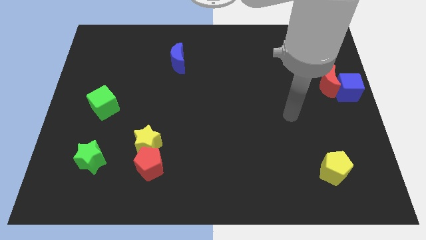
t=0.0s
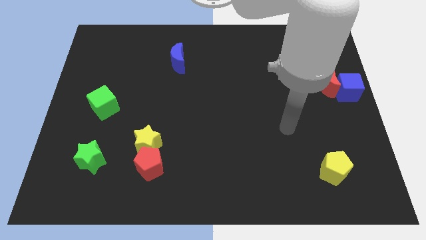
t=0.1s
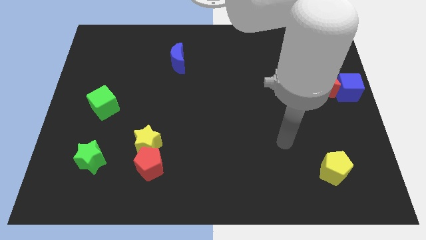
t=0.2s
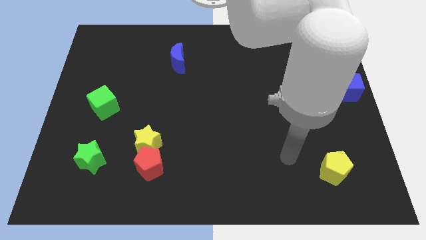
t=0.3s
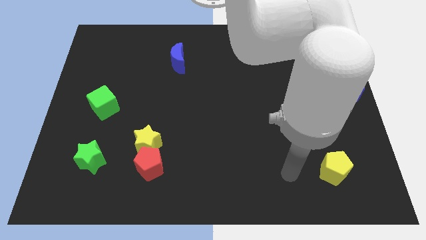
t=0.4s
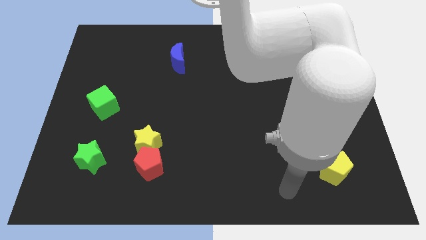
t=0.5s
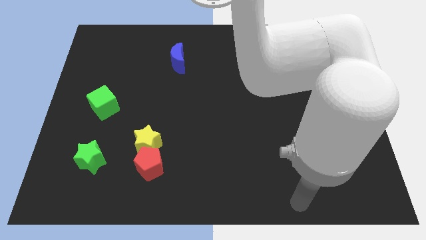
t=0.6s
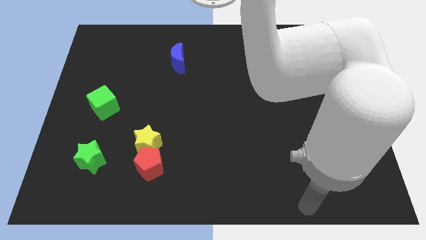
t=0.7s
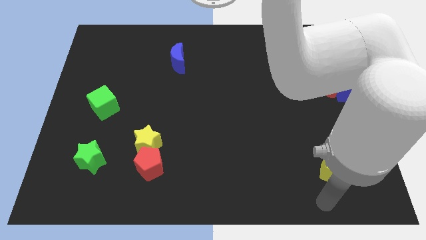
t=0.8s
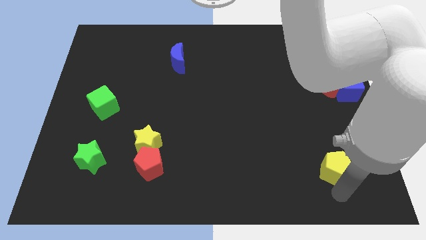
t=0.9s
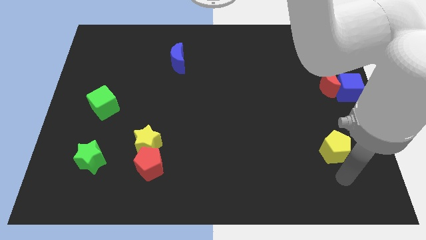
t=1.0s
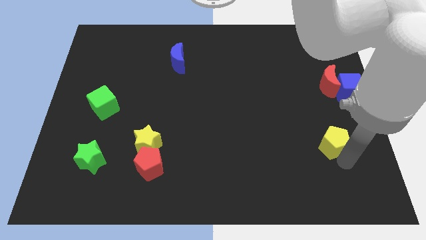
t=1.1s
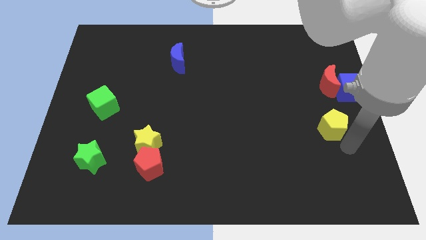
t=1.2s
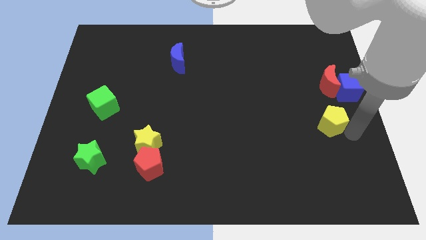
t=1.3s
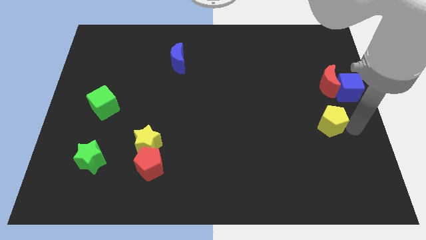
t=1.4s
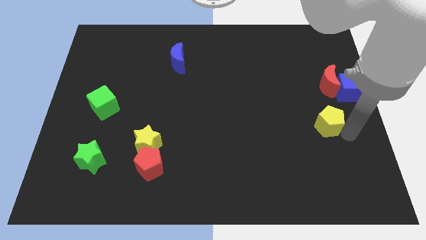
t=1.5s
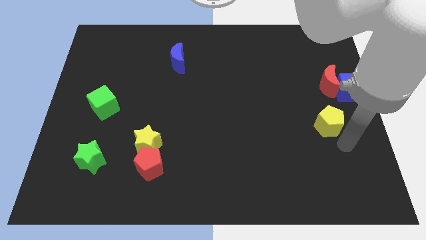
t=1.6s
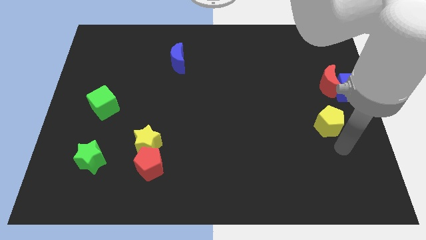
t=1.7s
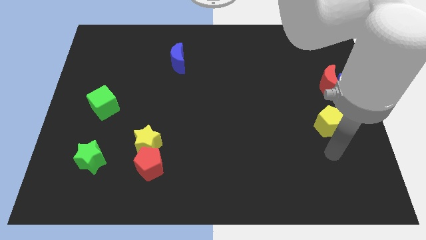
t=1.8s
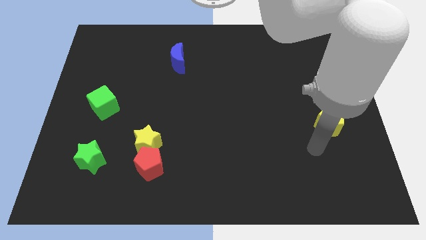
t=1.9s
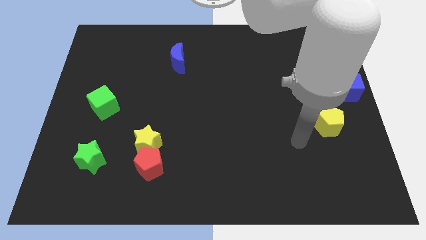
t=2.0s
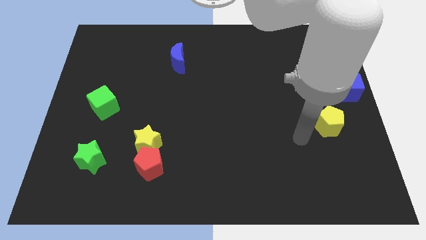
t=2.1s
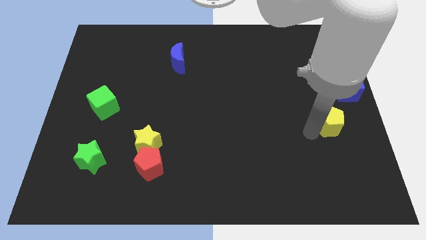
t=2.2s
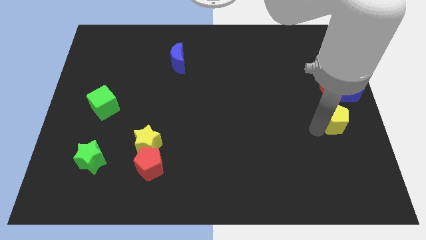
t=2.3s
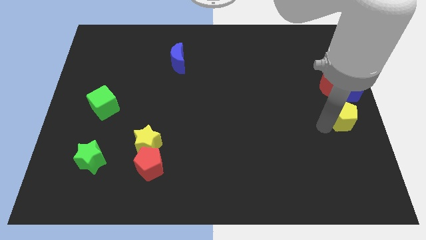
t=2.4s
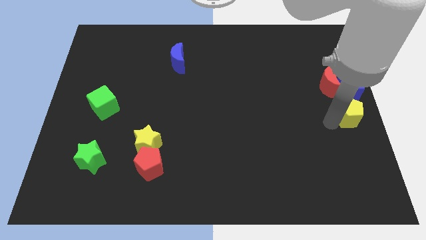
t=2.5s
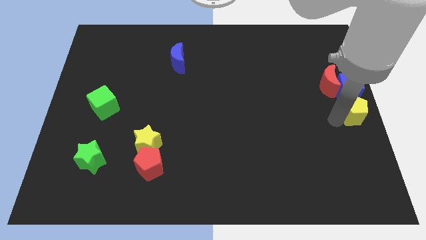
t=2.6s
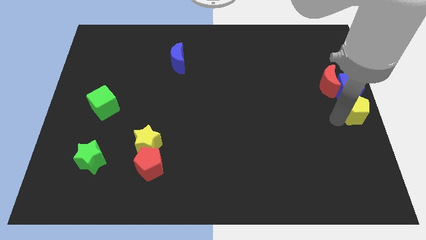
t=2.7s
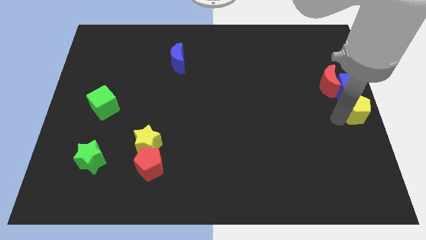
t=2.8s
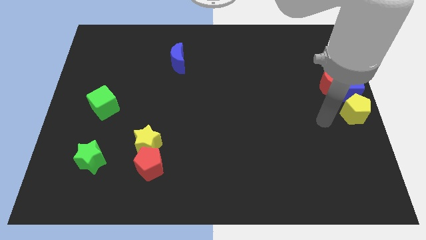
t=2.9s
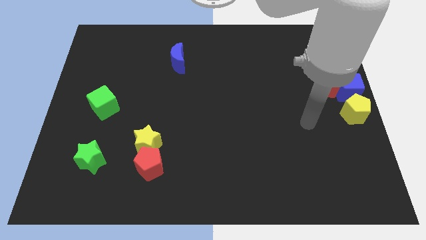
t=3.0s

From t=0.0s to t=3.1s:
slide yellow pentagon towards blue cube

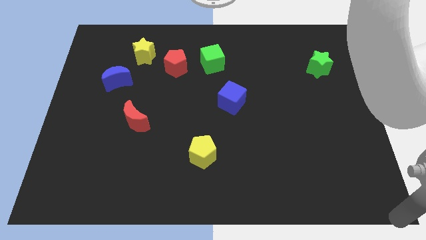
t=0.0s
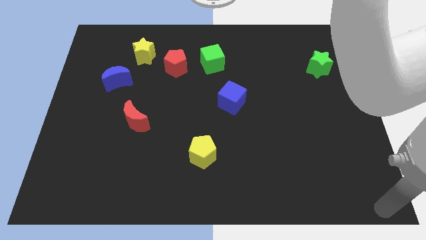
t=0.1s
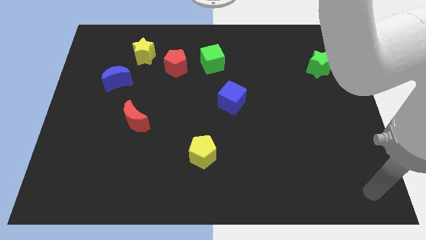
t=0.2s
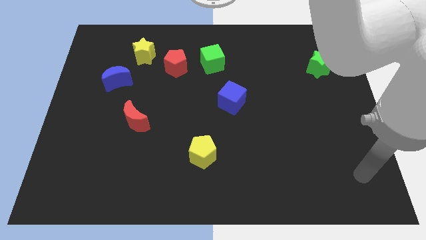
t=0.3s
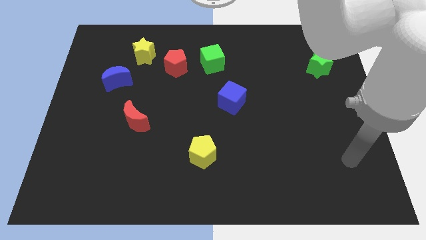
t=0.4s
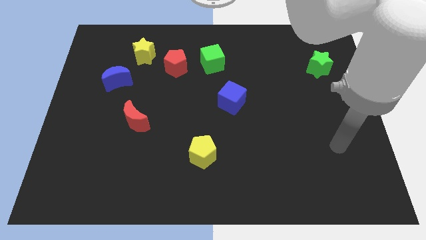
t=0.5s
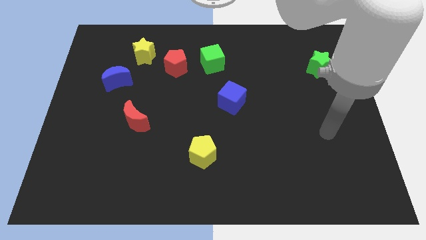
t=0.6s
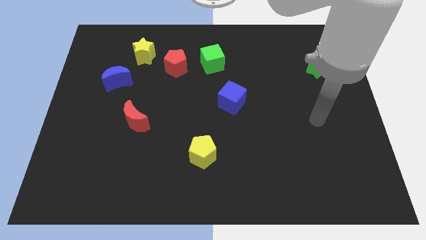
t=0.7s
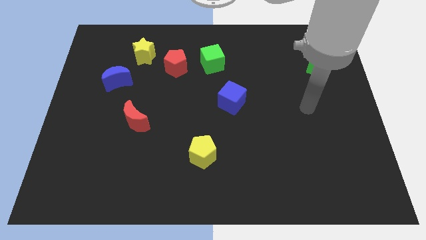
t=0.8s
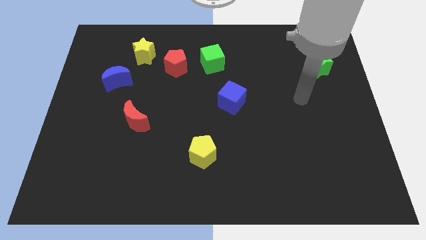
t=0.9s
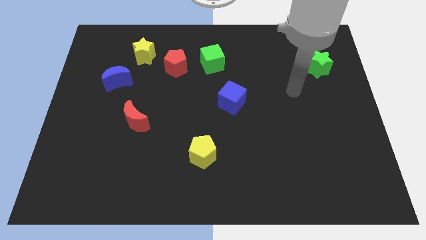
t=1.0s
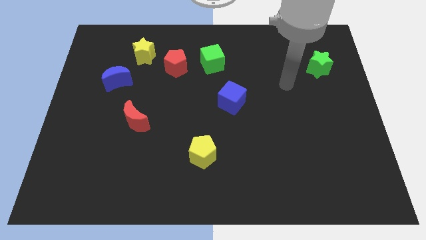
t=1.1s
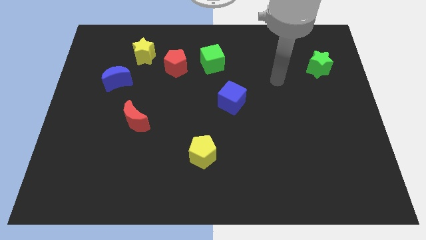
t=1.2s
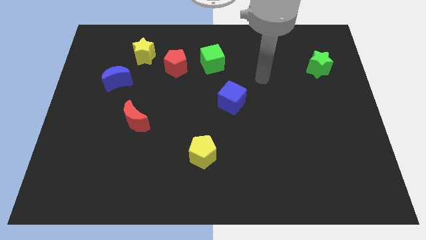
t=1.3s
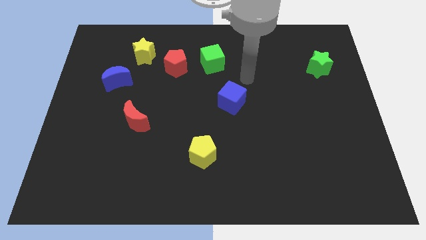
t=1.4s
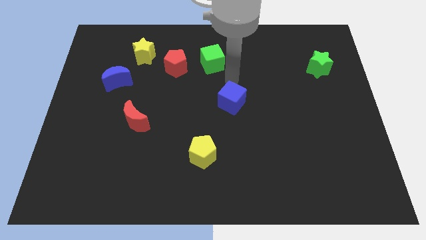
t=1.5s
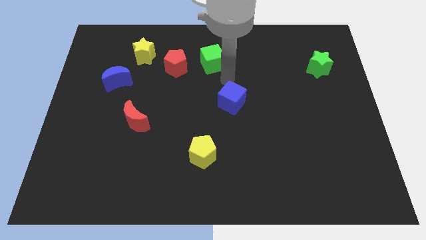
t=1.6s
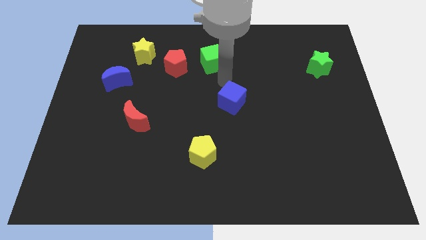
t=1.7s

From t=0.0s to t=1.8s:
place your arm at the top of the blue cube

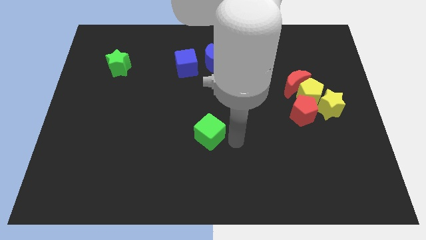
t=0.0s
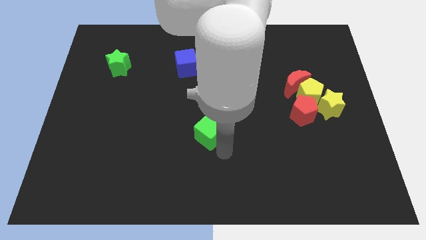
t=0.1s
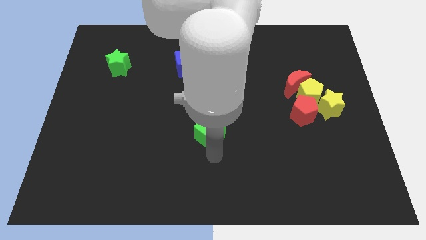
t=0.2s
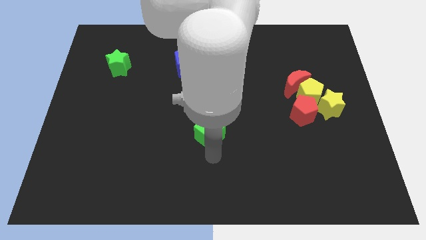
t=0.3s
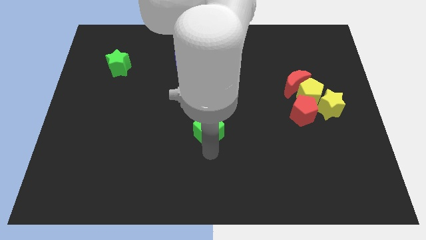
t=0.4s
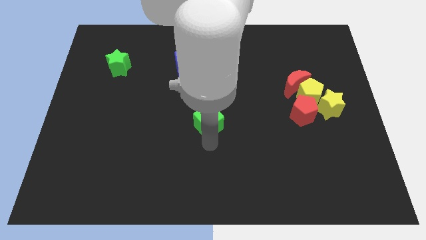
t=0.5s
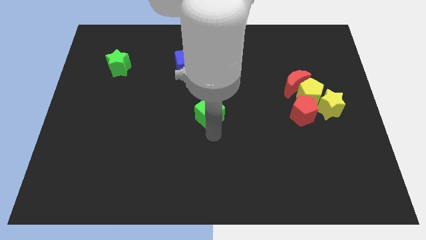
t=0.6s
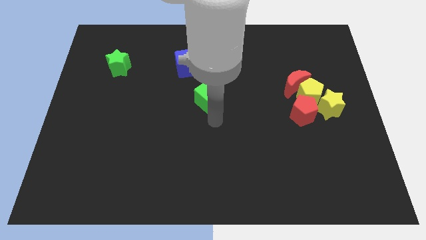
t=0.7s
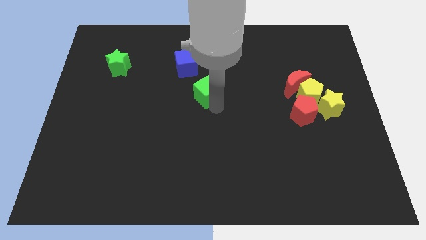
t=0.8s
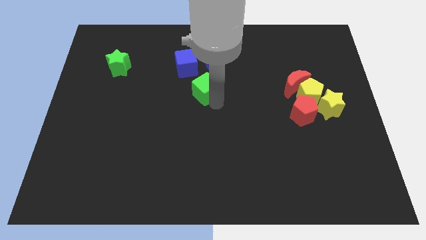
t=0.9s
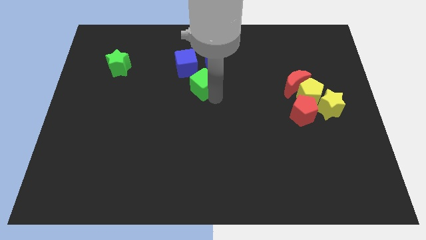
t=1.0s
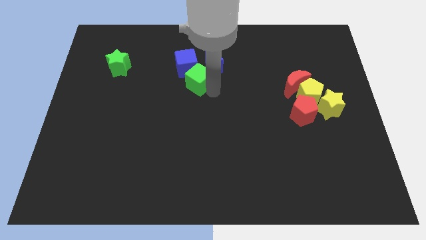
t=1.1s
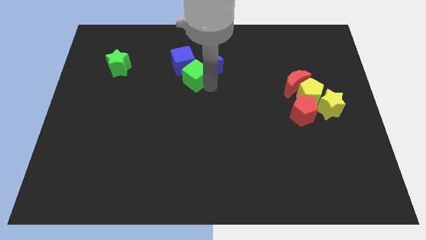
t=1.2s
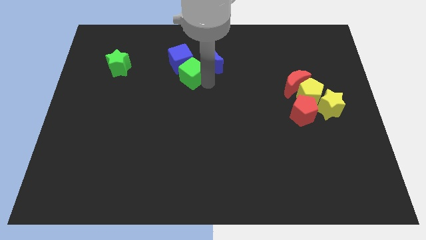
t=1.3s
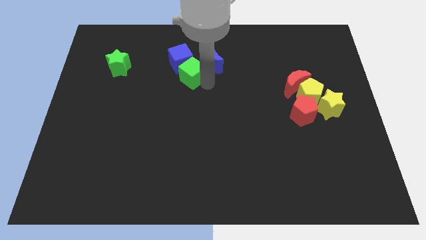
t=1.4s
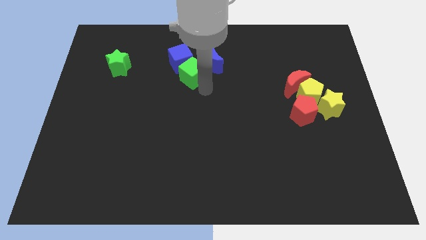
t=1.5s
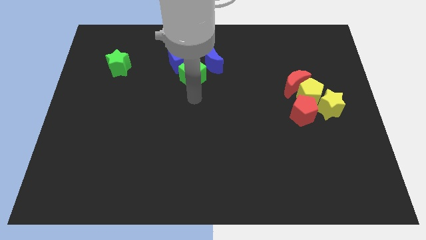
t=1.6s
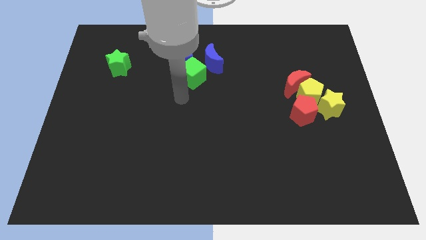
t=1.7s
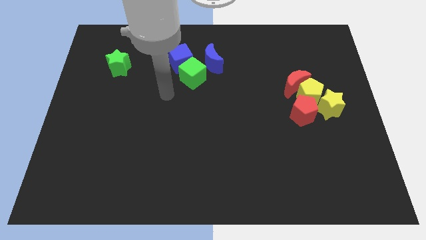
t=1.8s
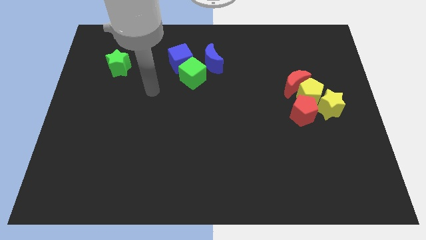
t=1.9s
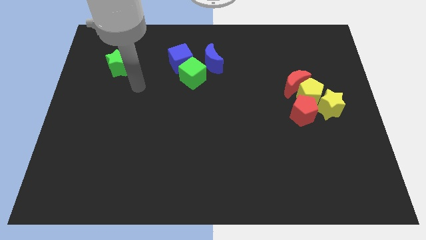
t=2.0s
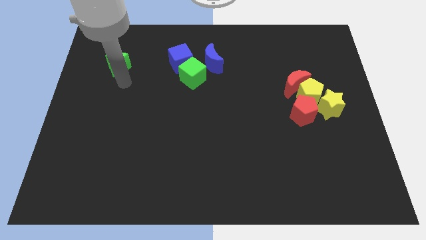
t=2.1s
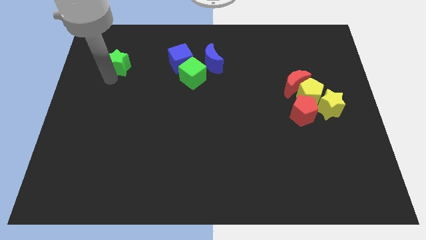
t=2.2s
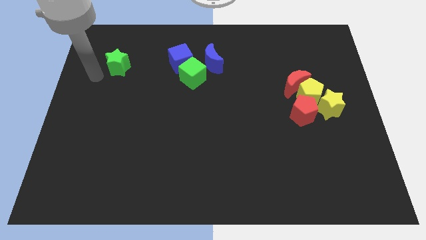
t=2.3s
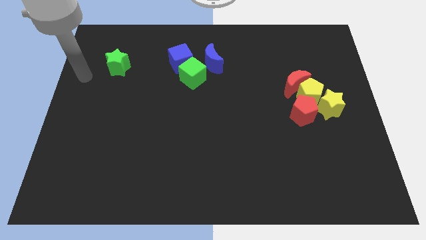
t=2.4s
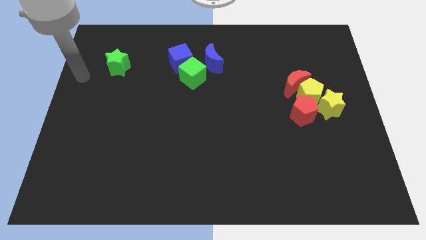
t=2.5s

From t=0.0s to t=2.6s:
push the green cube into the blue cube

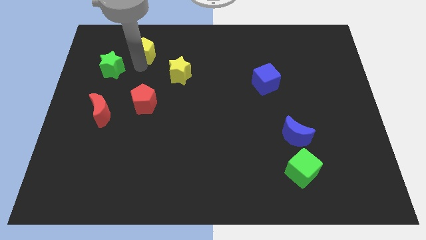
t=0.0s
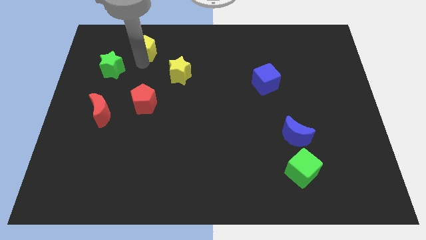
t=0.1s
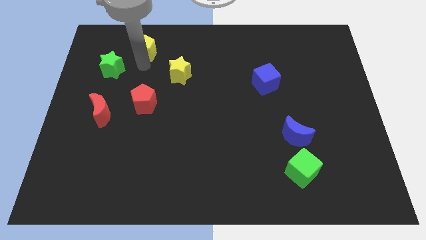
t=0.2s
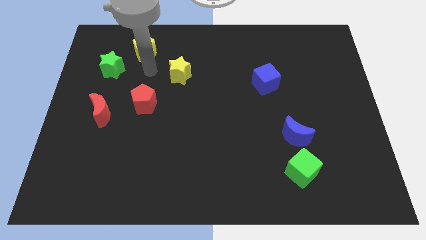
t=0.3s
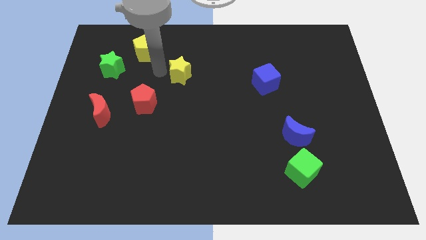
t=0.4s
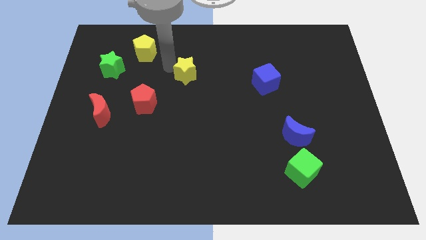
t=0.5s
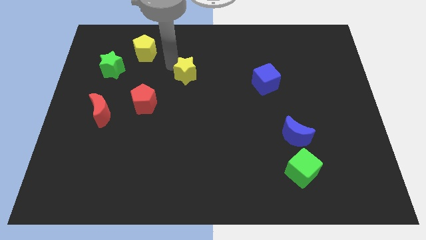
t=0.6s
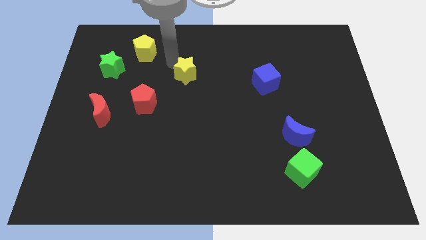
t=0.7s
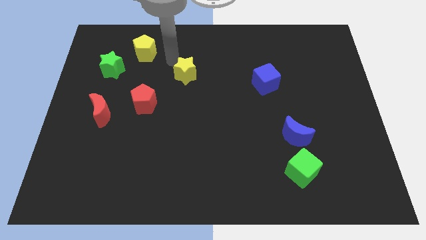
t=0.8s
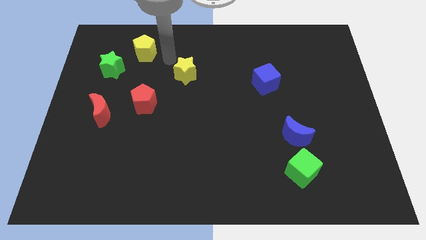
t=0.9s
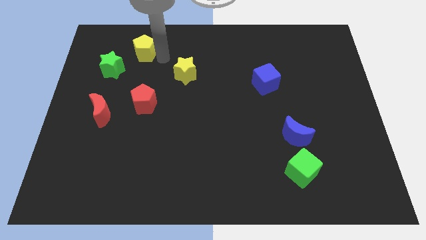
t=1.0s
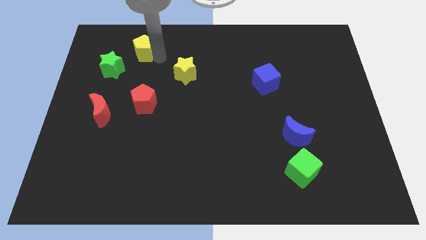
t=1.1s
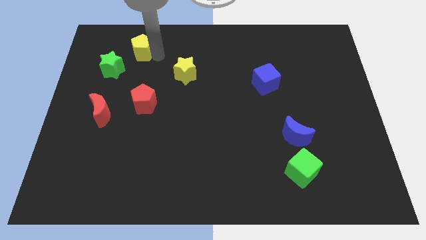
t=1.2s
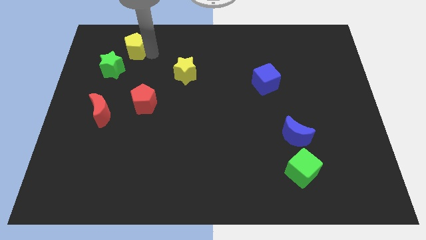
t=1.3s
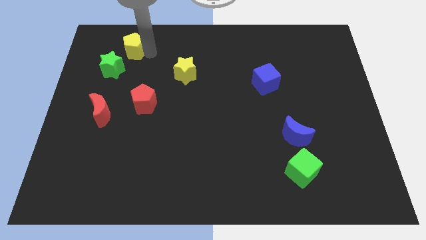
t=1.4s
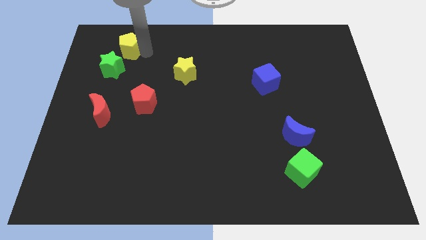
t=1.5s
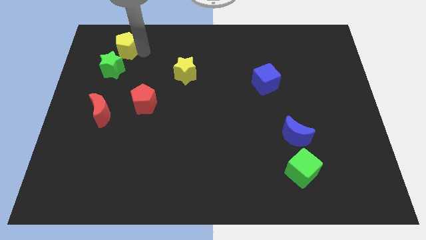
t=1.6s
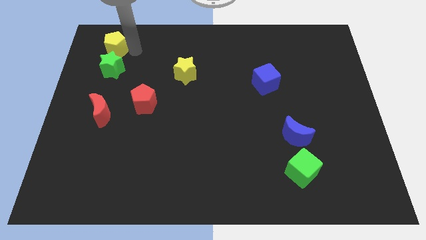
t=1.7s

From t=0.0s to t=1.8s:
place the yellow pentagon on the top of the green star
